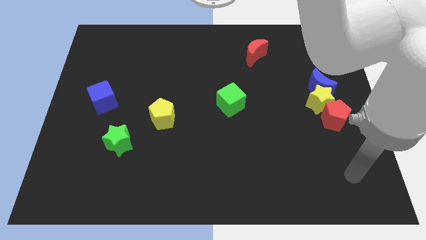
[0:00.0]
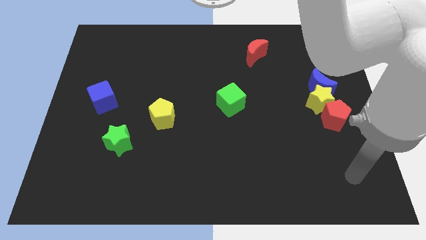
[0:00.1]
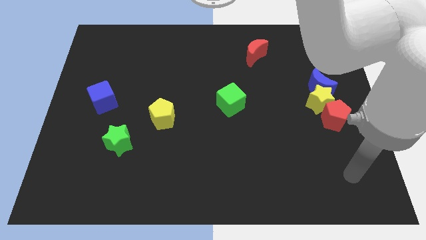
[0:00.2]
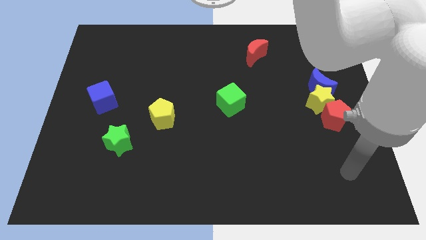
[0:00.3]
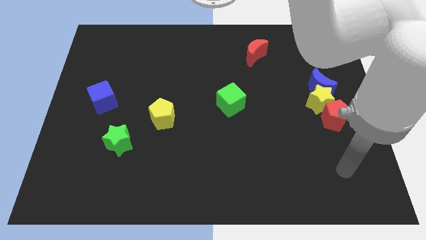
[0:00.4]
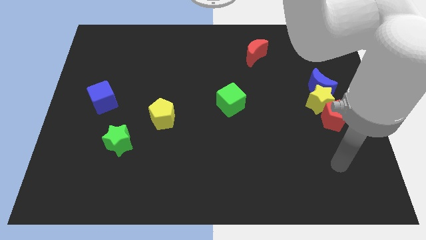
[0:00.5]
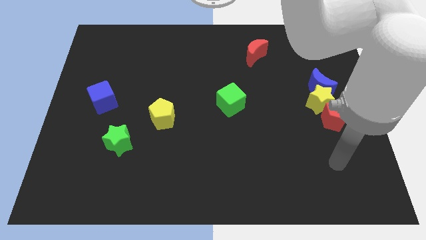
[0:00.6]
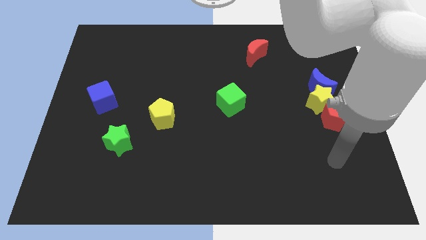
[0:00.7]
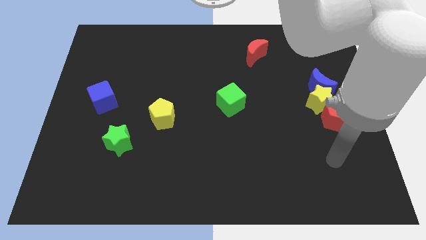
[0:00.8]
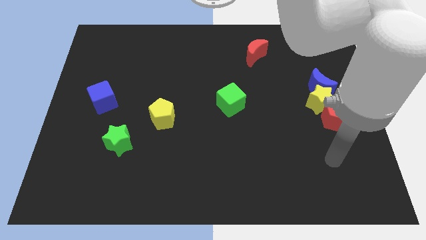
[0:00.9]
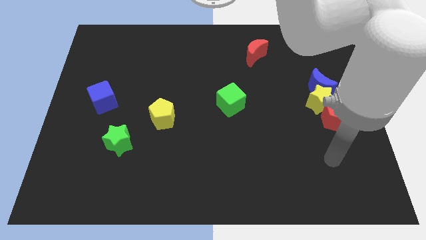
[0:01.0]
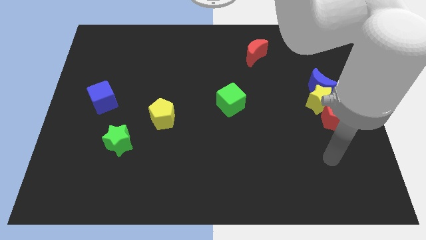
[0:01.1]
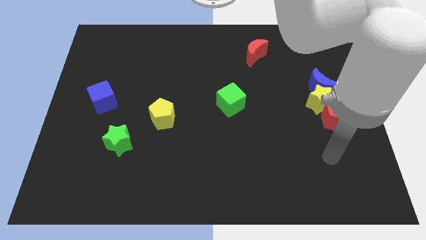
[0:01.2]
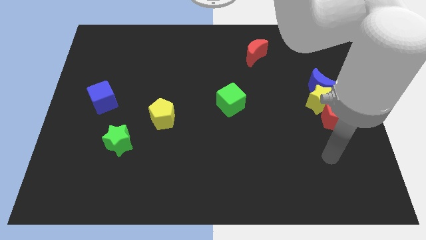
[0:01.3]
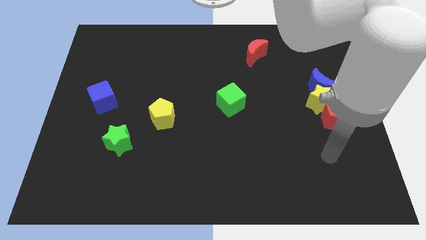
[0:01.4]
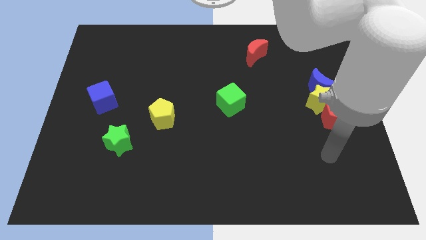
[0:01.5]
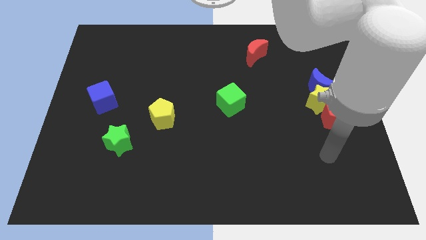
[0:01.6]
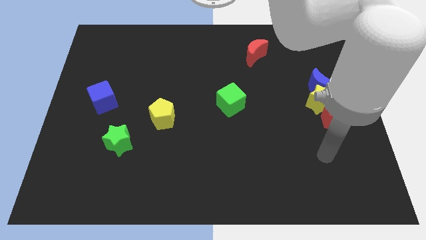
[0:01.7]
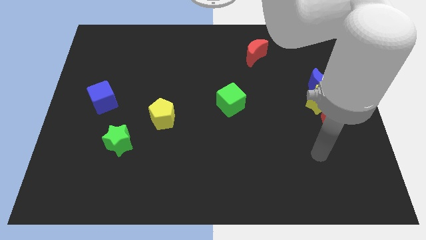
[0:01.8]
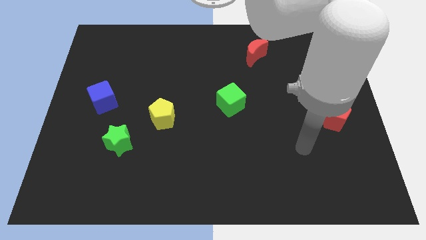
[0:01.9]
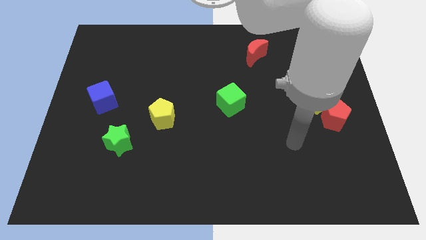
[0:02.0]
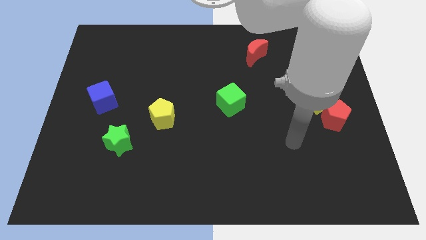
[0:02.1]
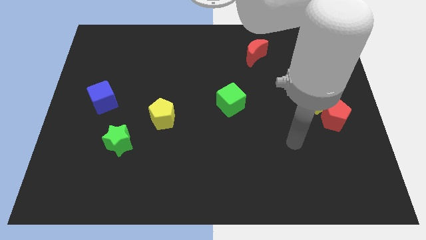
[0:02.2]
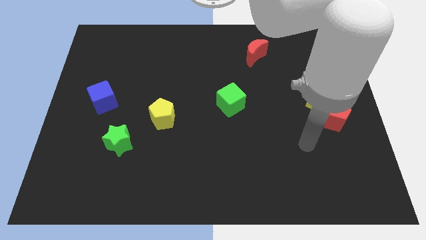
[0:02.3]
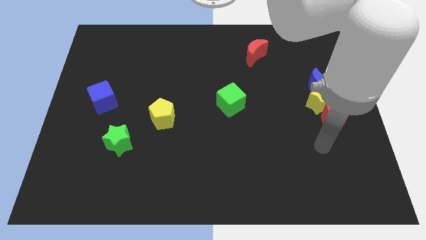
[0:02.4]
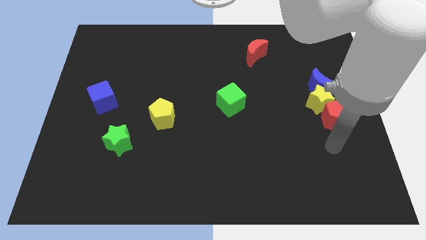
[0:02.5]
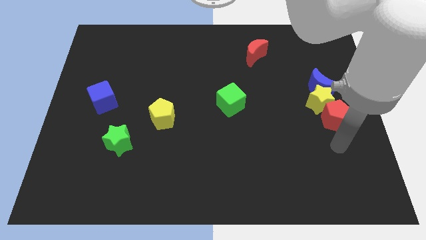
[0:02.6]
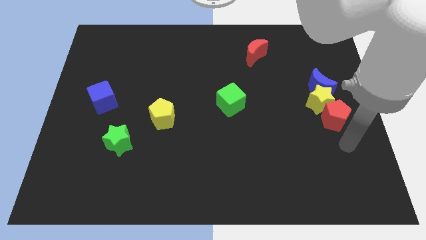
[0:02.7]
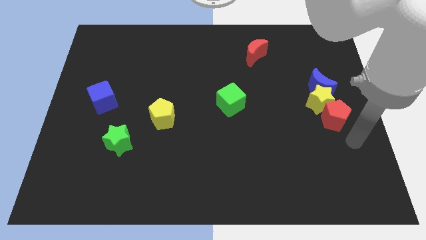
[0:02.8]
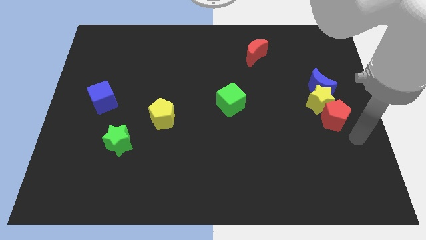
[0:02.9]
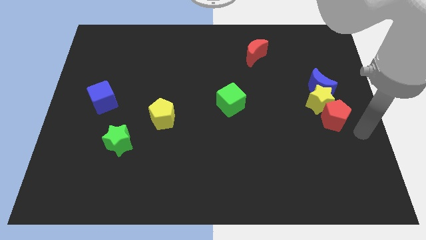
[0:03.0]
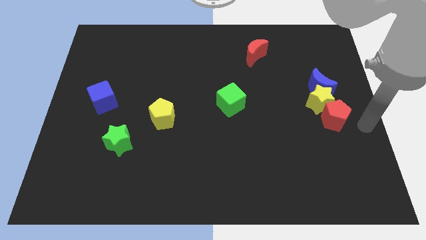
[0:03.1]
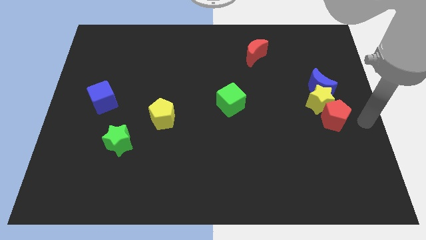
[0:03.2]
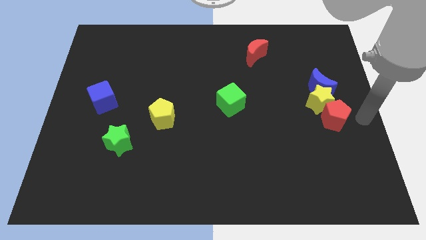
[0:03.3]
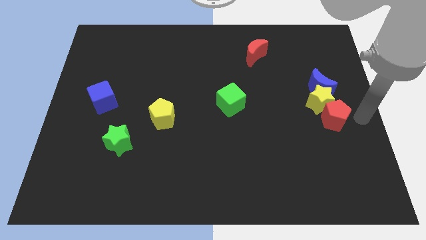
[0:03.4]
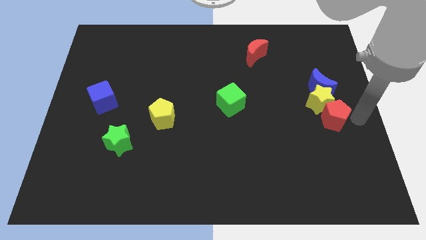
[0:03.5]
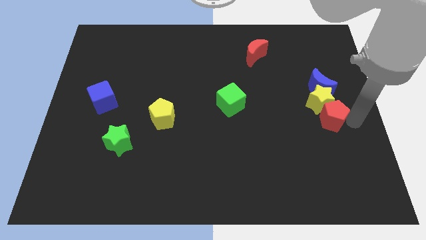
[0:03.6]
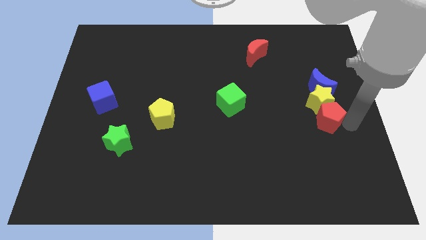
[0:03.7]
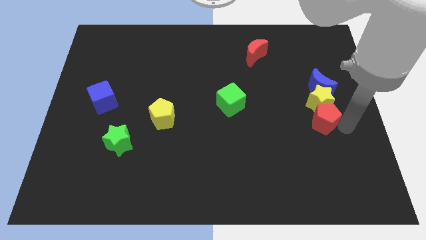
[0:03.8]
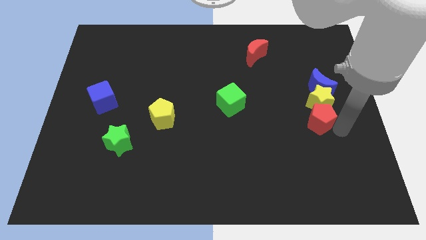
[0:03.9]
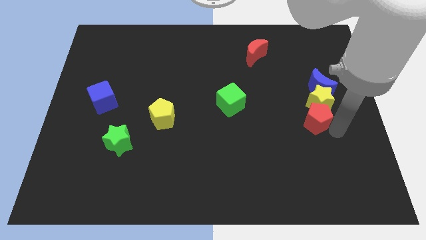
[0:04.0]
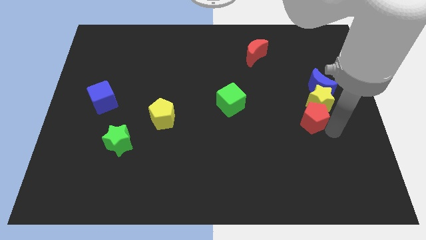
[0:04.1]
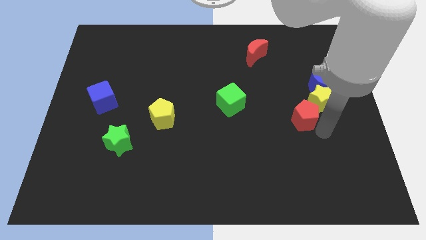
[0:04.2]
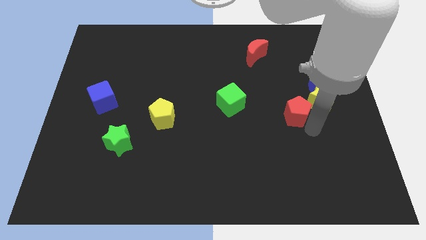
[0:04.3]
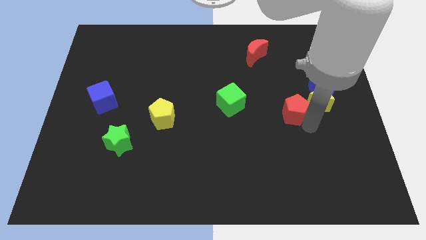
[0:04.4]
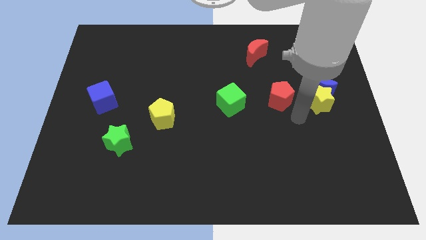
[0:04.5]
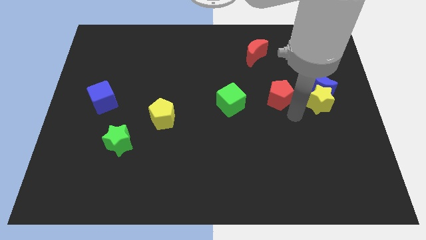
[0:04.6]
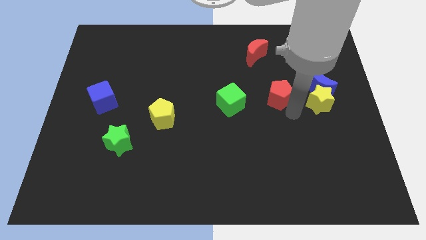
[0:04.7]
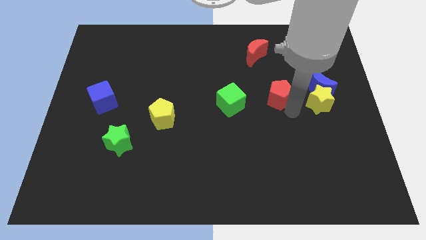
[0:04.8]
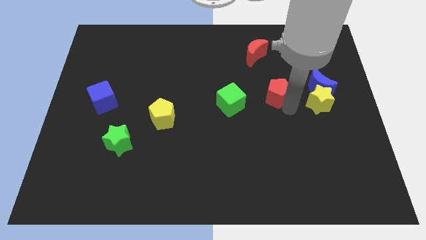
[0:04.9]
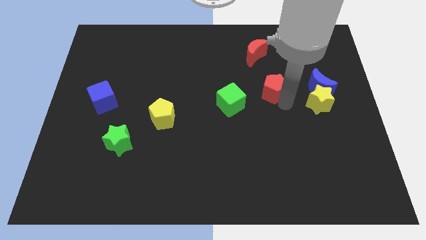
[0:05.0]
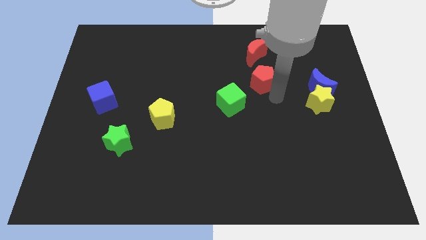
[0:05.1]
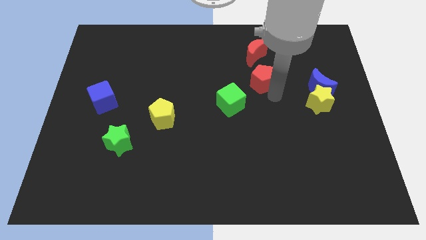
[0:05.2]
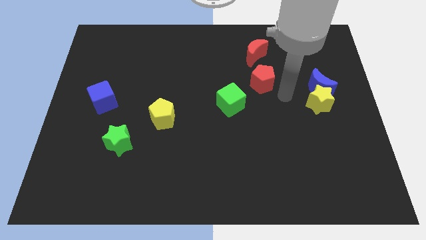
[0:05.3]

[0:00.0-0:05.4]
move the red pentagon away from the yellow star

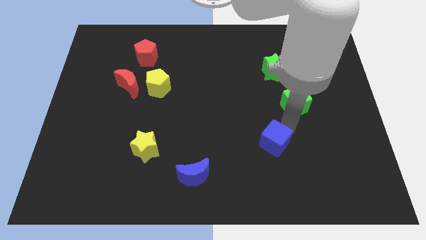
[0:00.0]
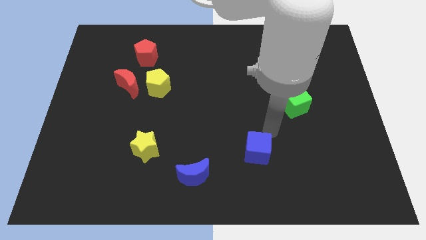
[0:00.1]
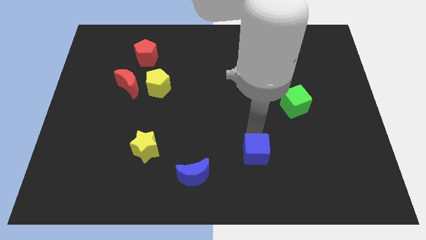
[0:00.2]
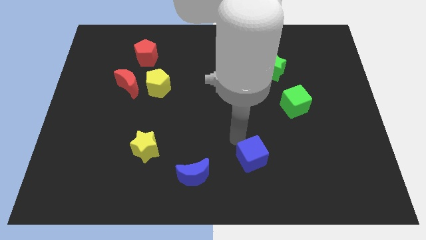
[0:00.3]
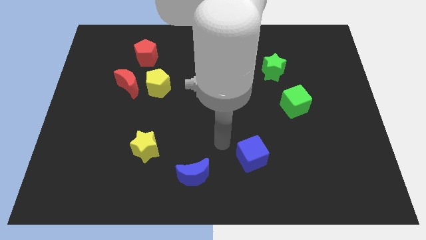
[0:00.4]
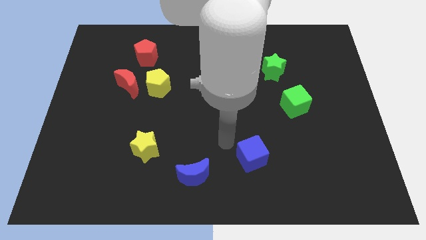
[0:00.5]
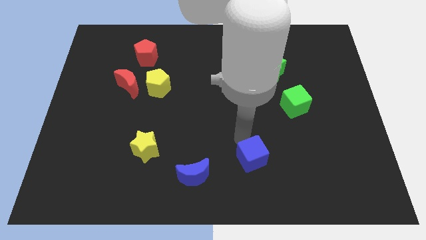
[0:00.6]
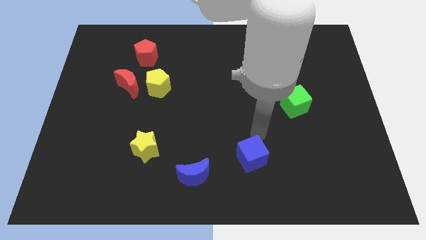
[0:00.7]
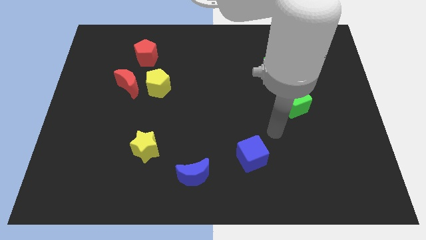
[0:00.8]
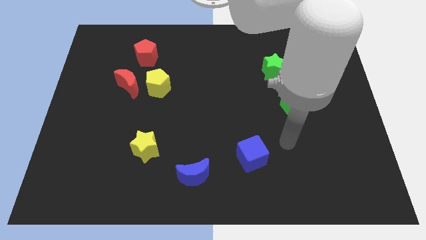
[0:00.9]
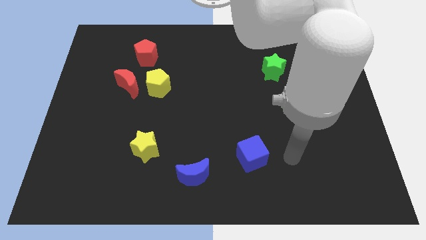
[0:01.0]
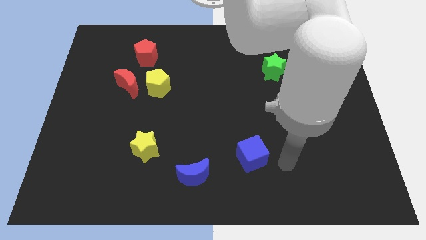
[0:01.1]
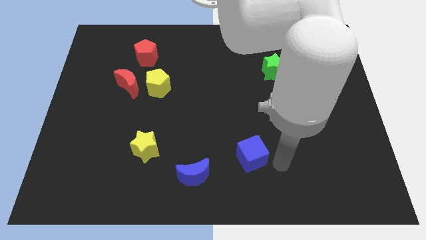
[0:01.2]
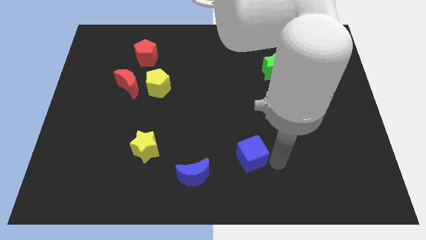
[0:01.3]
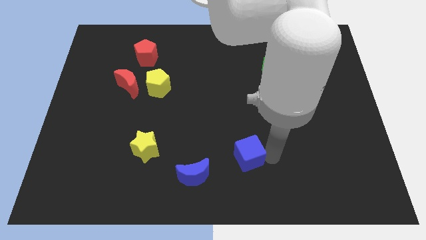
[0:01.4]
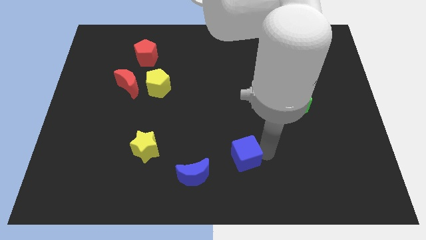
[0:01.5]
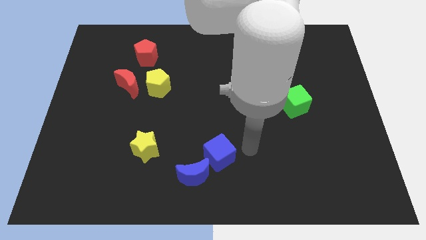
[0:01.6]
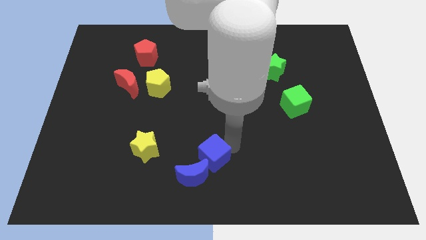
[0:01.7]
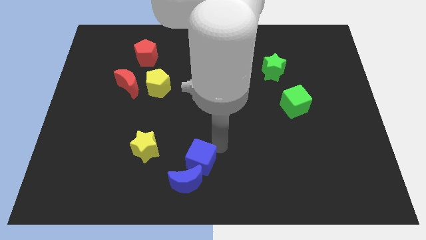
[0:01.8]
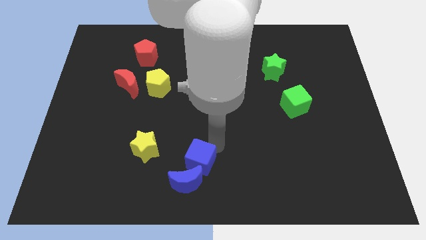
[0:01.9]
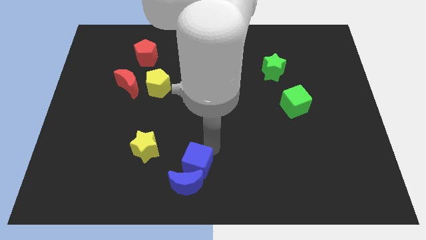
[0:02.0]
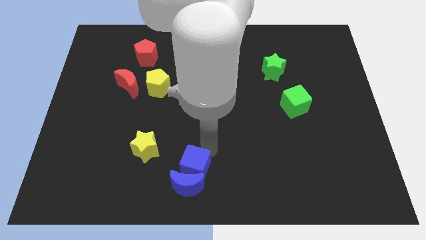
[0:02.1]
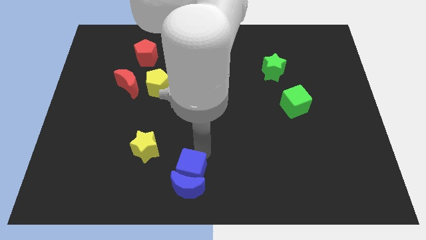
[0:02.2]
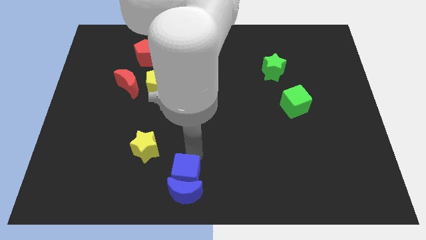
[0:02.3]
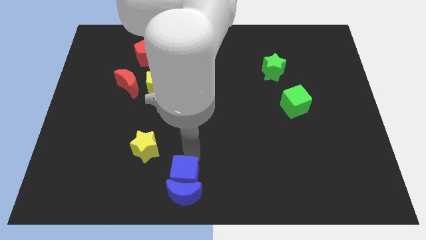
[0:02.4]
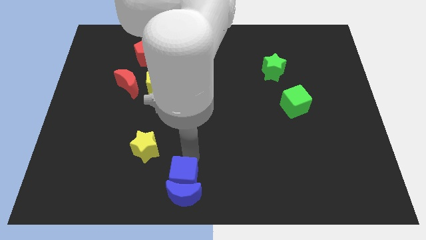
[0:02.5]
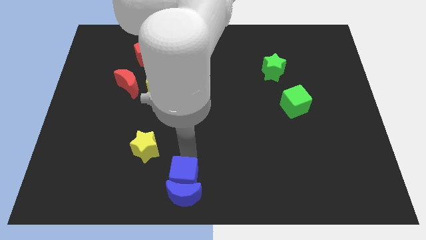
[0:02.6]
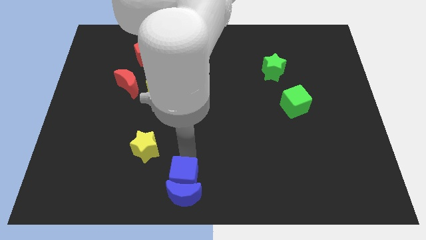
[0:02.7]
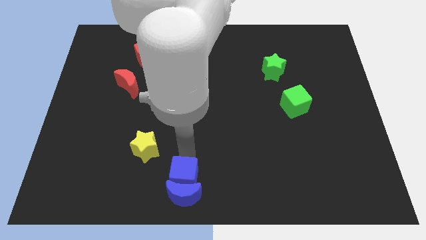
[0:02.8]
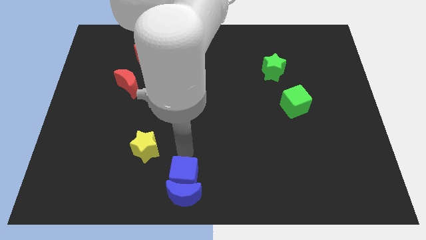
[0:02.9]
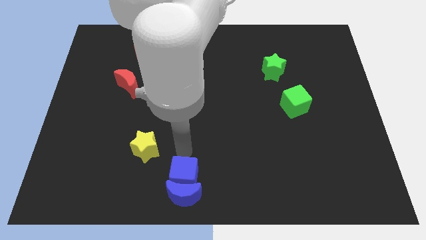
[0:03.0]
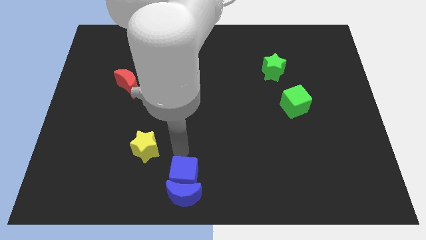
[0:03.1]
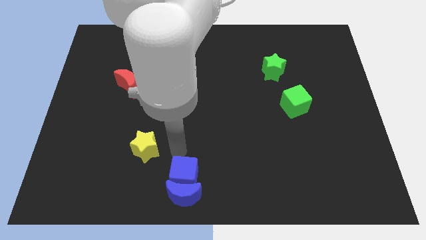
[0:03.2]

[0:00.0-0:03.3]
push the blue cube to the top of the blue crescent

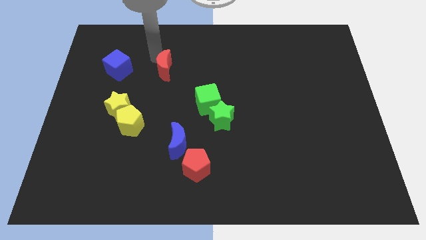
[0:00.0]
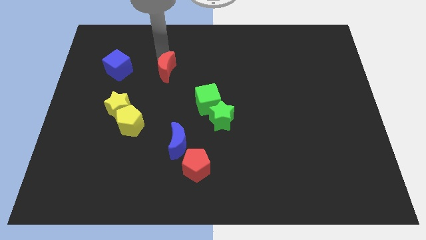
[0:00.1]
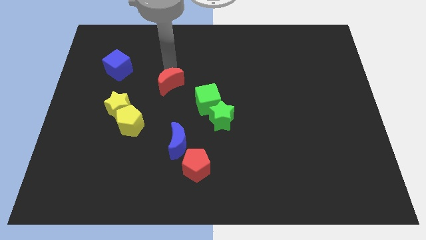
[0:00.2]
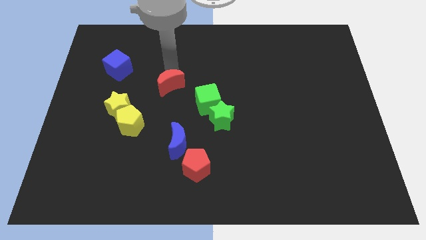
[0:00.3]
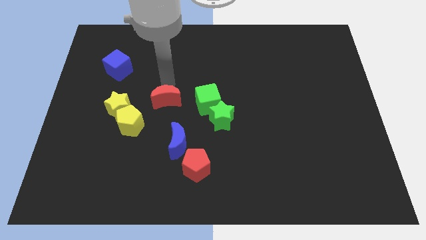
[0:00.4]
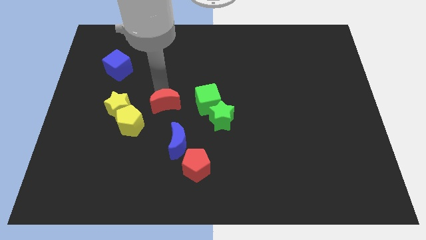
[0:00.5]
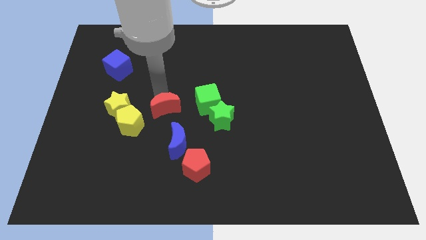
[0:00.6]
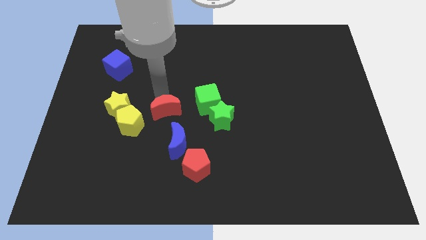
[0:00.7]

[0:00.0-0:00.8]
place the red crescent towards the top right side of the yellow pentagon
